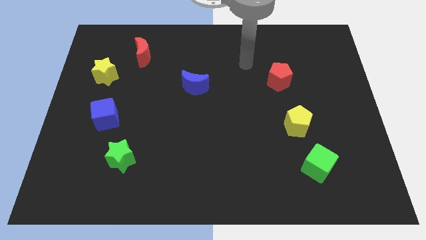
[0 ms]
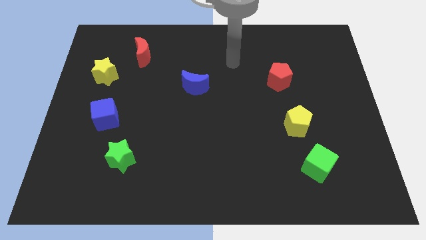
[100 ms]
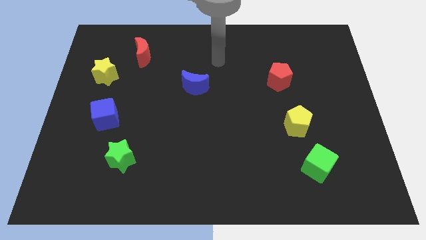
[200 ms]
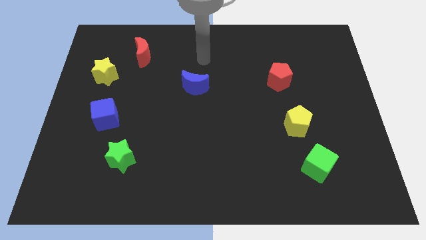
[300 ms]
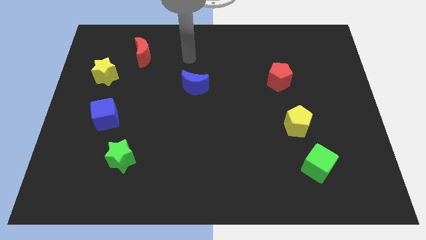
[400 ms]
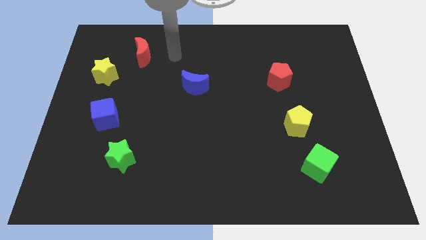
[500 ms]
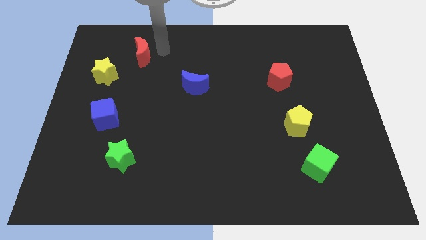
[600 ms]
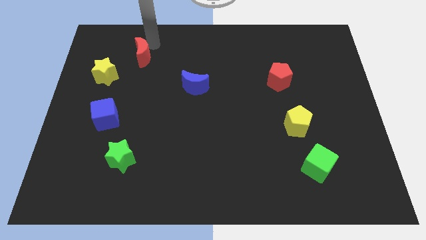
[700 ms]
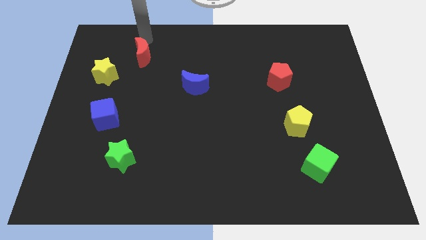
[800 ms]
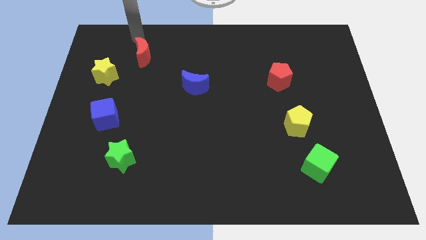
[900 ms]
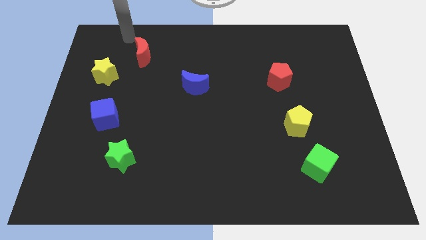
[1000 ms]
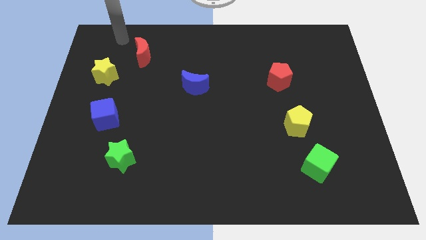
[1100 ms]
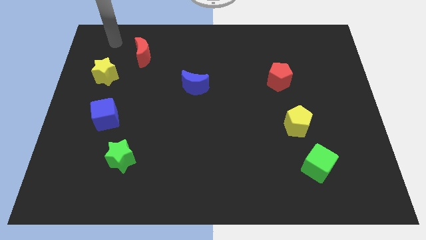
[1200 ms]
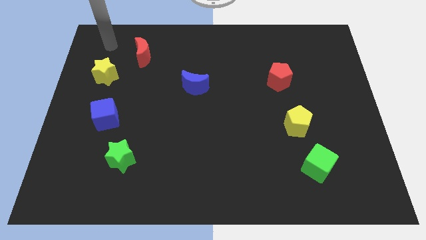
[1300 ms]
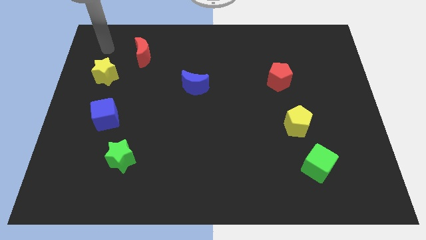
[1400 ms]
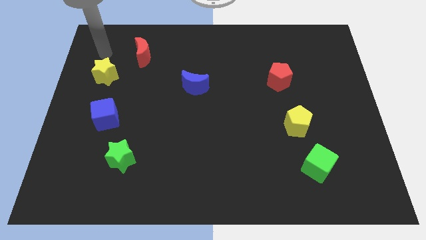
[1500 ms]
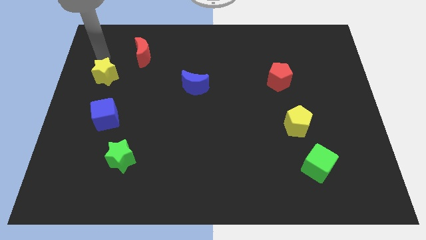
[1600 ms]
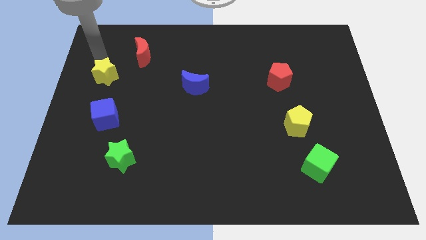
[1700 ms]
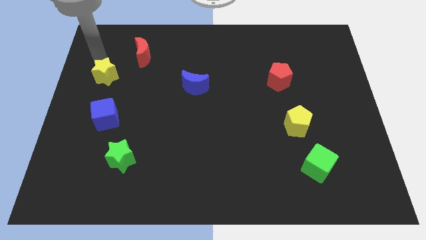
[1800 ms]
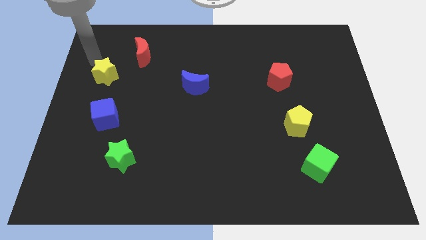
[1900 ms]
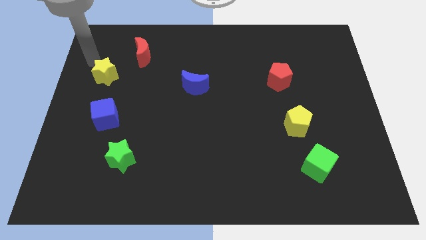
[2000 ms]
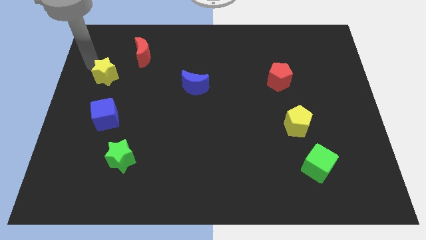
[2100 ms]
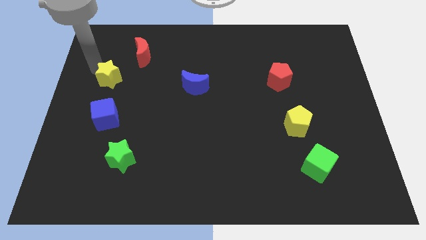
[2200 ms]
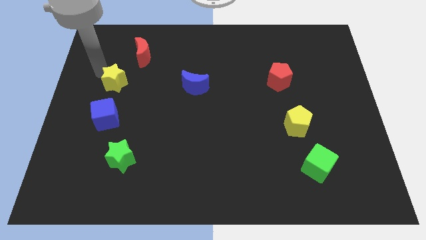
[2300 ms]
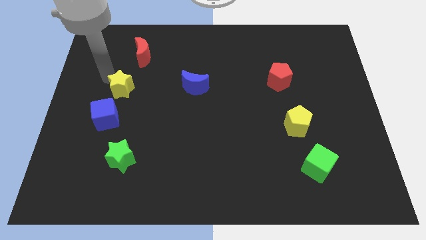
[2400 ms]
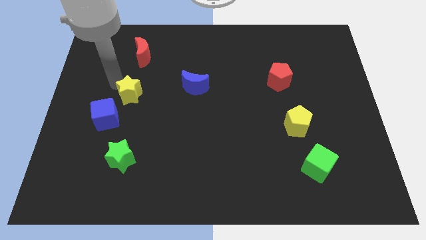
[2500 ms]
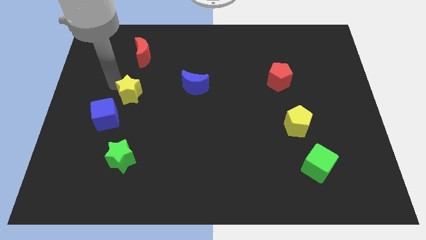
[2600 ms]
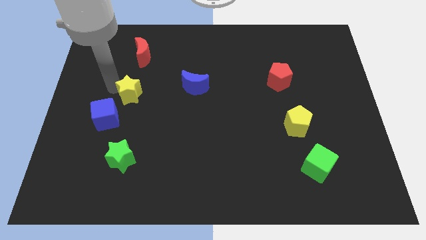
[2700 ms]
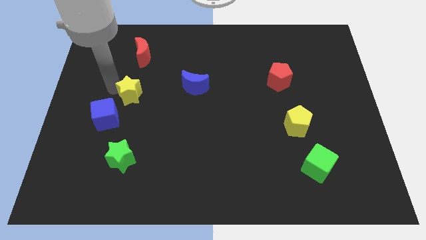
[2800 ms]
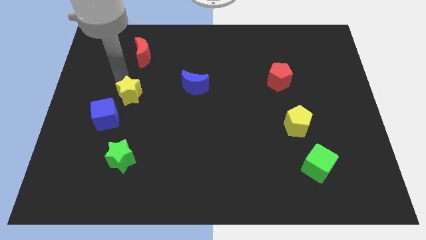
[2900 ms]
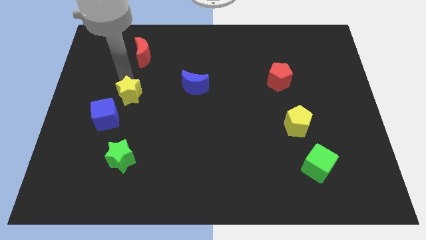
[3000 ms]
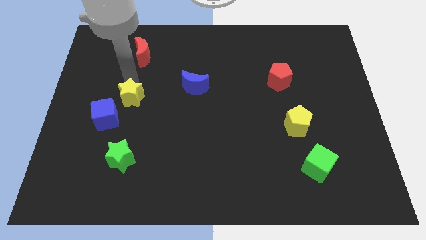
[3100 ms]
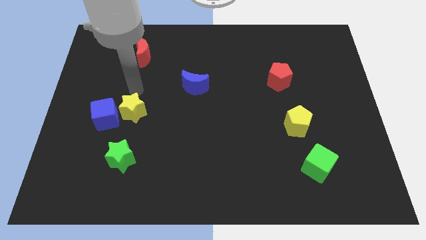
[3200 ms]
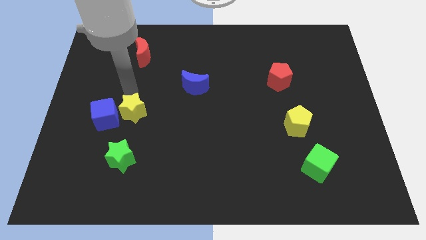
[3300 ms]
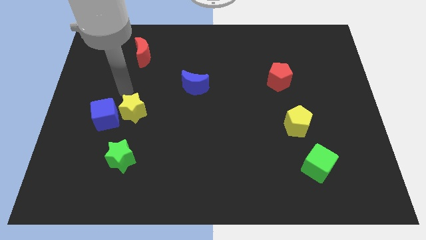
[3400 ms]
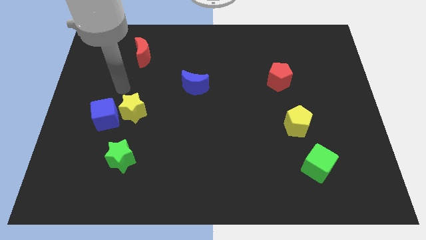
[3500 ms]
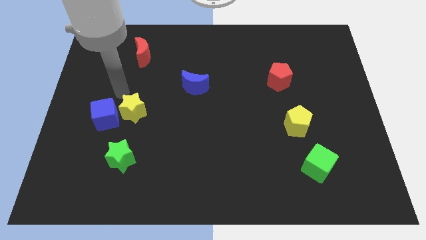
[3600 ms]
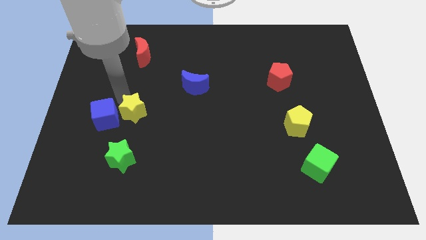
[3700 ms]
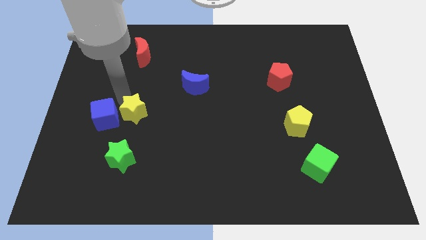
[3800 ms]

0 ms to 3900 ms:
move the yellow star right side of the blue cube

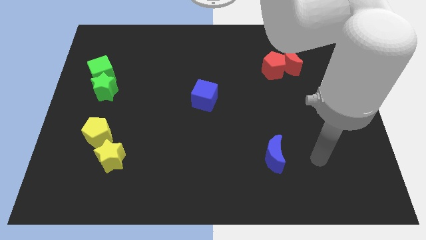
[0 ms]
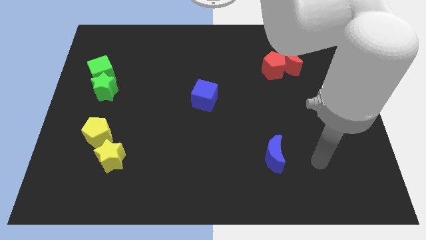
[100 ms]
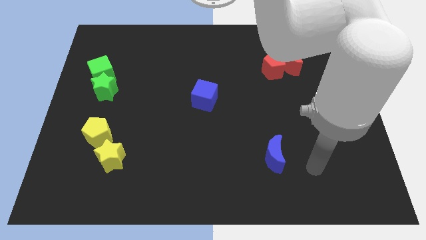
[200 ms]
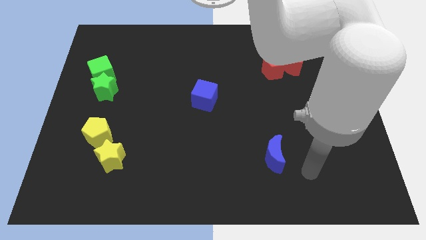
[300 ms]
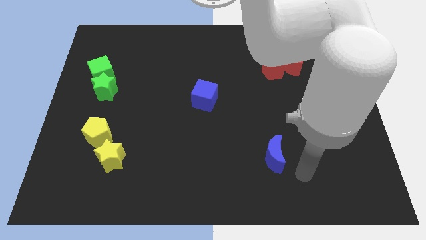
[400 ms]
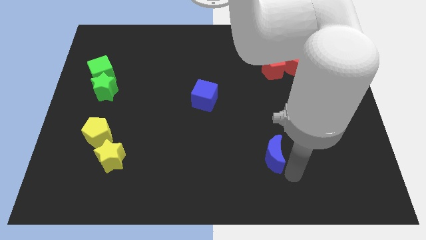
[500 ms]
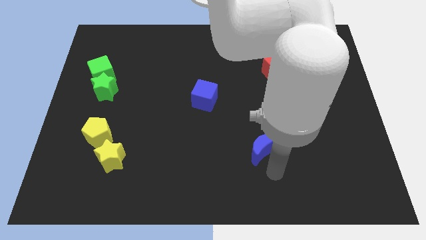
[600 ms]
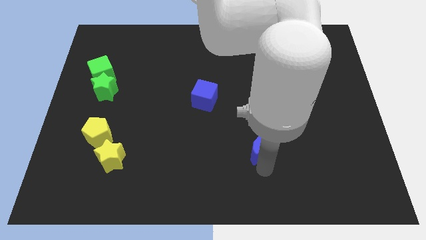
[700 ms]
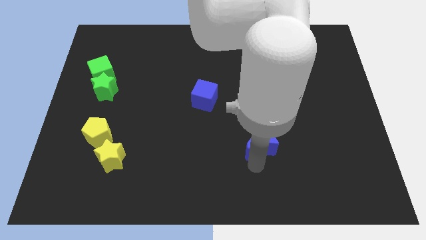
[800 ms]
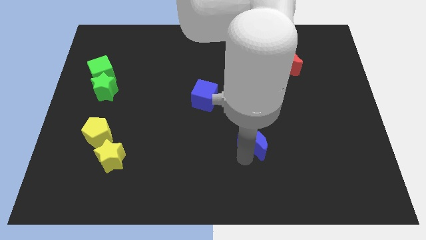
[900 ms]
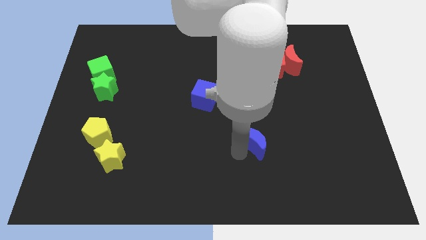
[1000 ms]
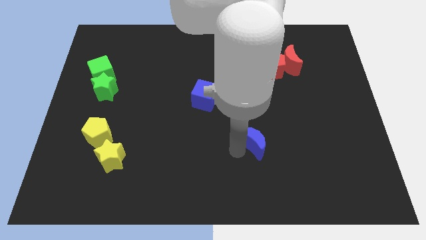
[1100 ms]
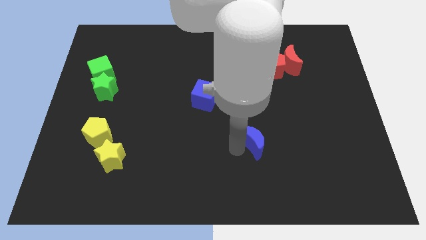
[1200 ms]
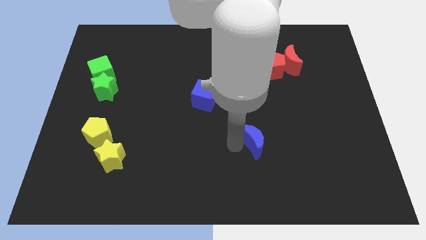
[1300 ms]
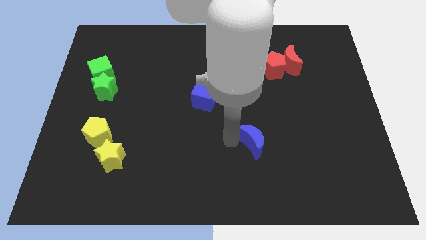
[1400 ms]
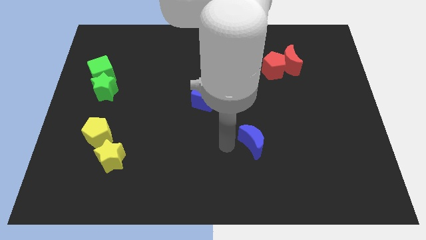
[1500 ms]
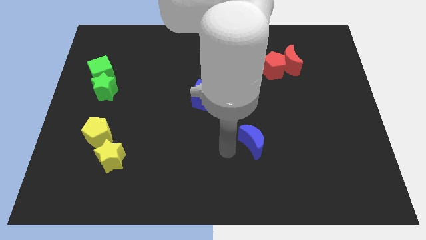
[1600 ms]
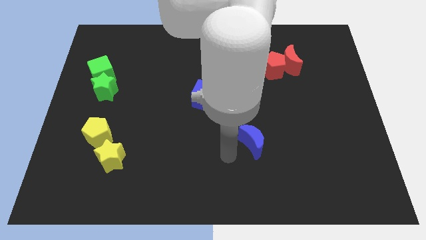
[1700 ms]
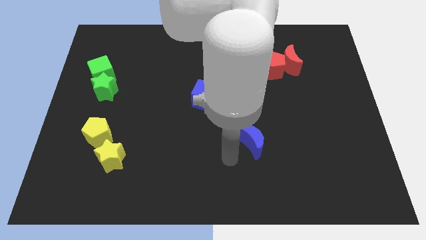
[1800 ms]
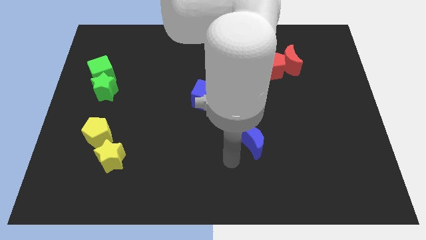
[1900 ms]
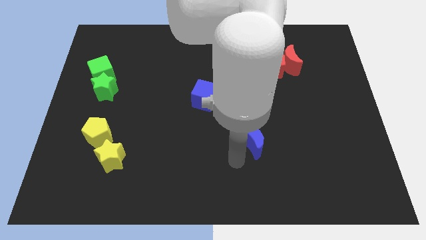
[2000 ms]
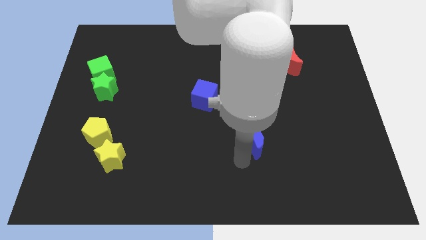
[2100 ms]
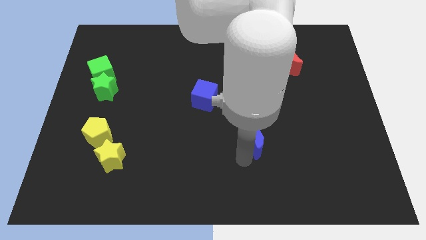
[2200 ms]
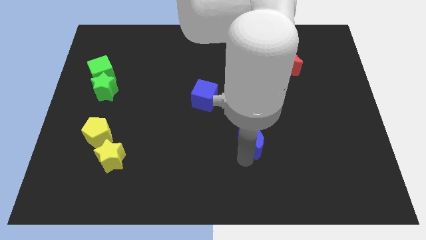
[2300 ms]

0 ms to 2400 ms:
slightly push the blue moon towards the up

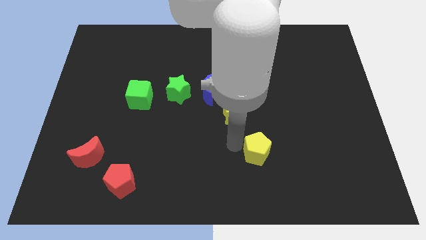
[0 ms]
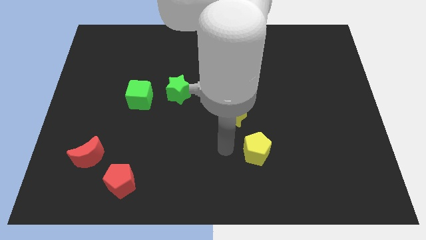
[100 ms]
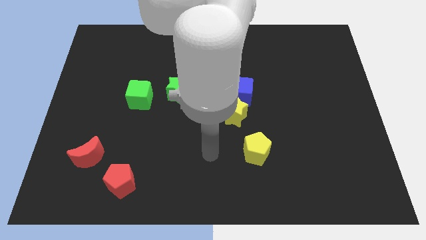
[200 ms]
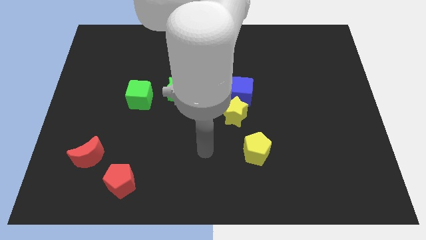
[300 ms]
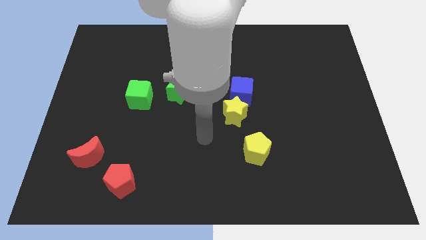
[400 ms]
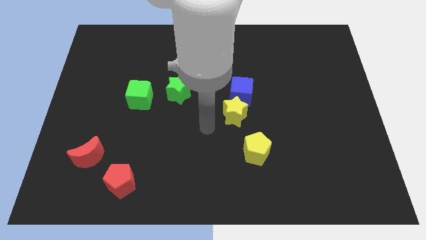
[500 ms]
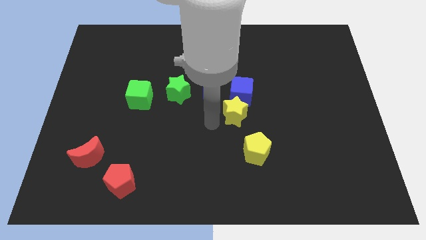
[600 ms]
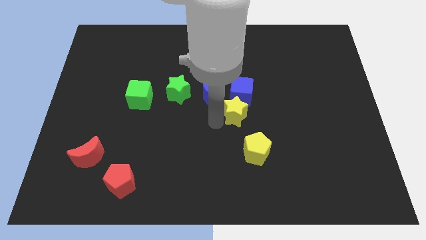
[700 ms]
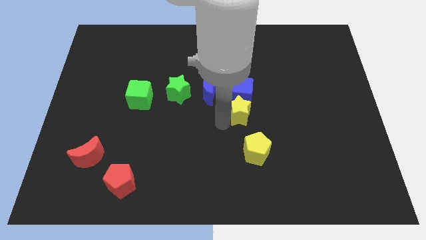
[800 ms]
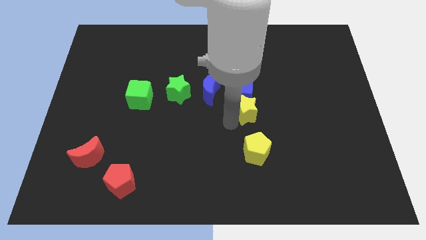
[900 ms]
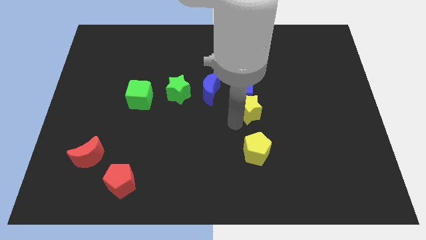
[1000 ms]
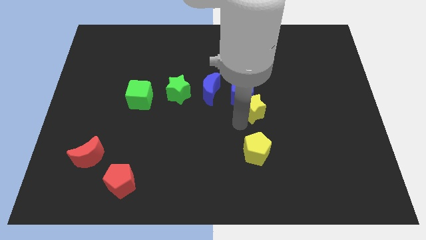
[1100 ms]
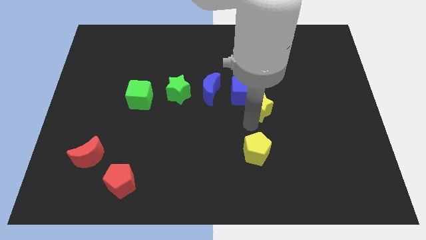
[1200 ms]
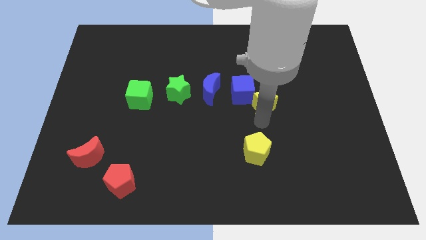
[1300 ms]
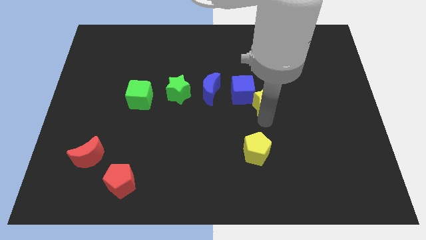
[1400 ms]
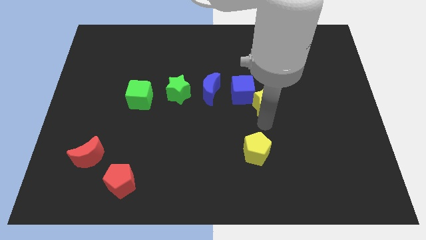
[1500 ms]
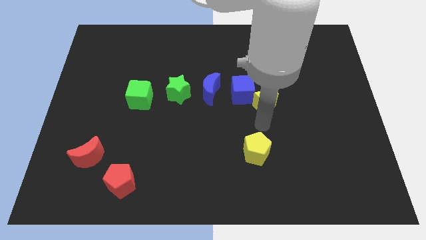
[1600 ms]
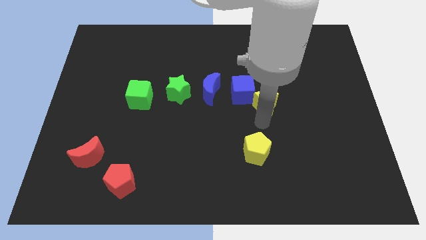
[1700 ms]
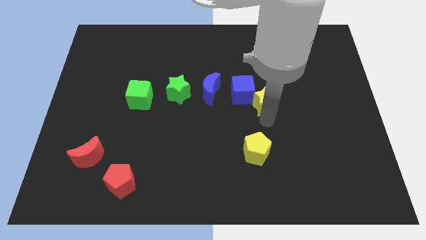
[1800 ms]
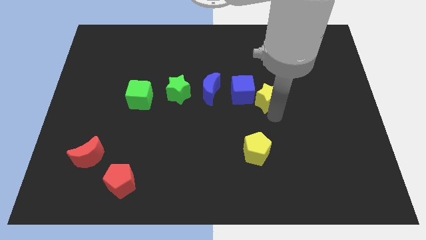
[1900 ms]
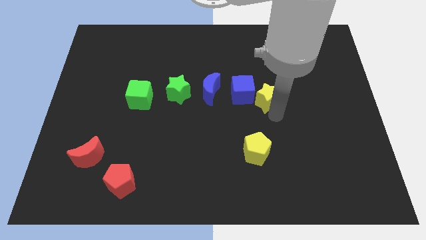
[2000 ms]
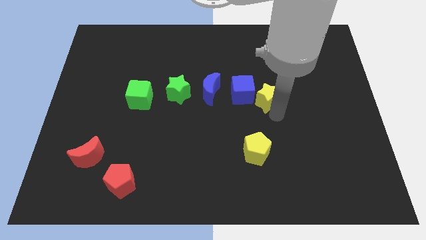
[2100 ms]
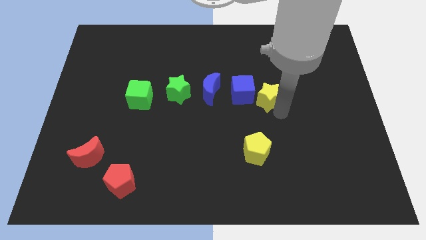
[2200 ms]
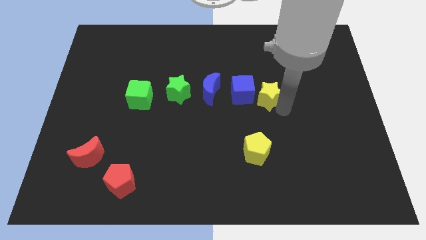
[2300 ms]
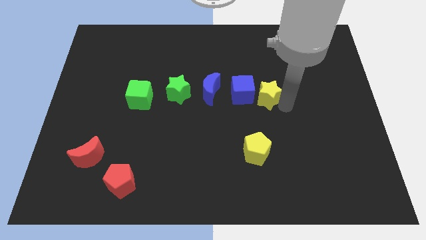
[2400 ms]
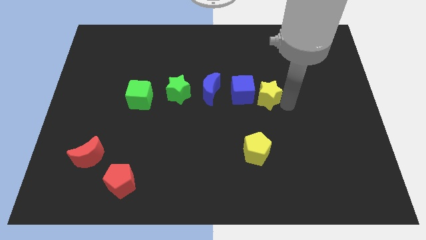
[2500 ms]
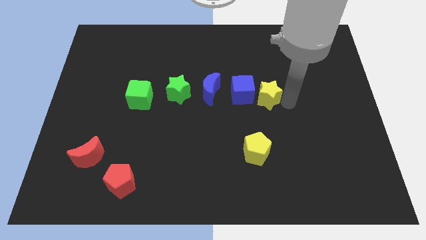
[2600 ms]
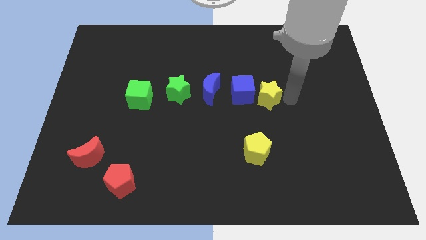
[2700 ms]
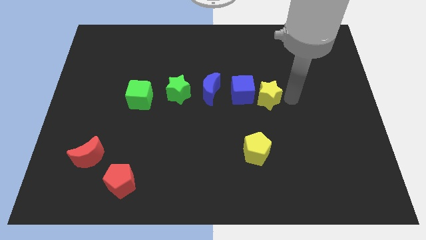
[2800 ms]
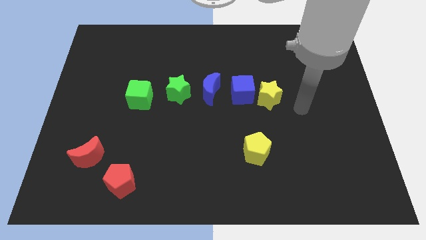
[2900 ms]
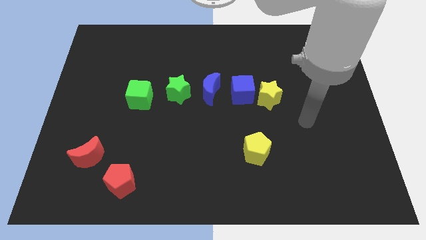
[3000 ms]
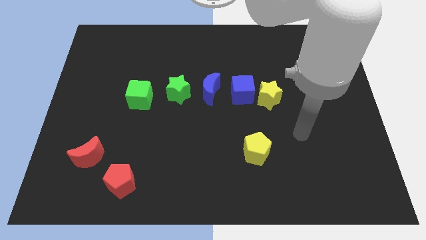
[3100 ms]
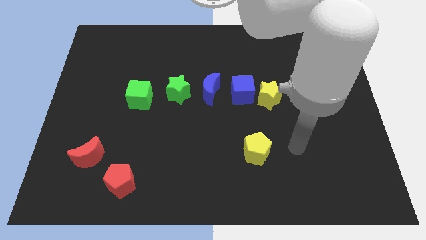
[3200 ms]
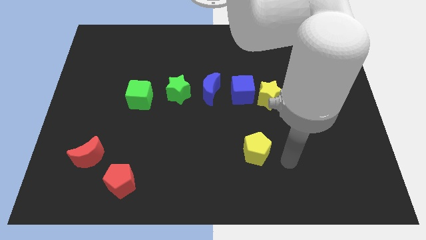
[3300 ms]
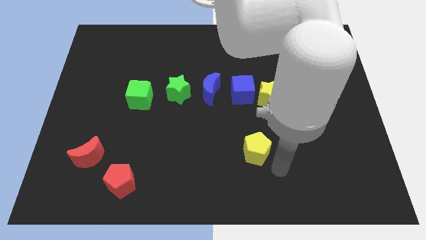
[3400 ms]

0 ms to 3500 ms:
move the yellow star to the right of the blue cube
